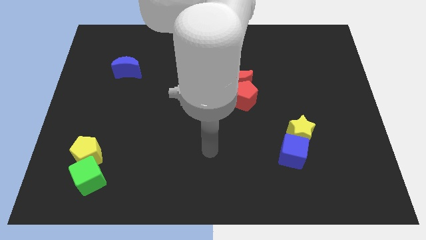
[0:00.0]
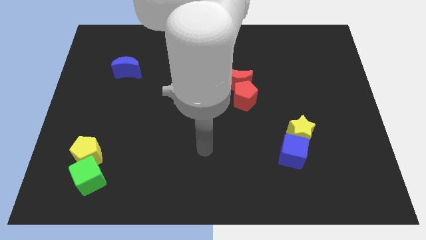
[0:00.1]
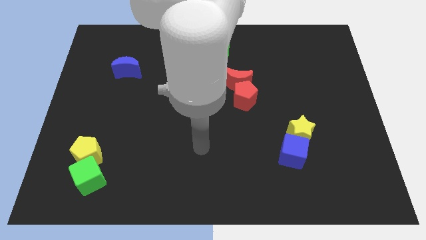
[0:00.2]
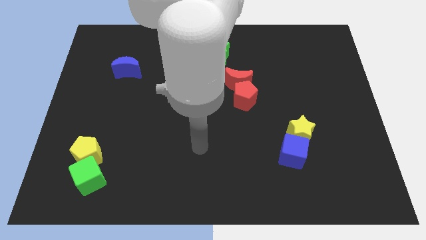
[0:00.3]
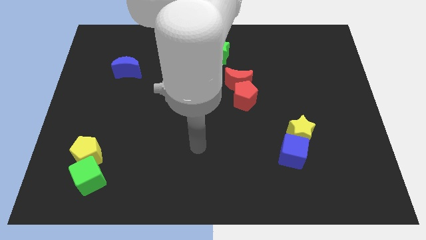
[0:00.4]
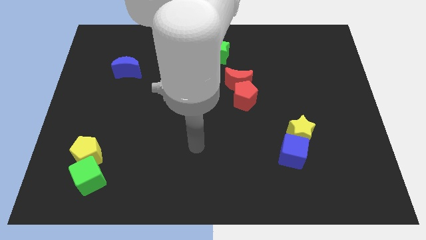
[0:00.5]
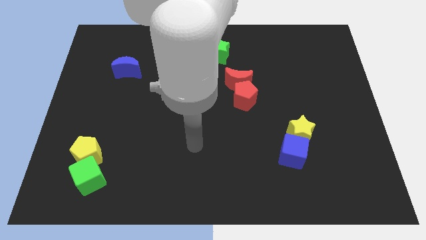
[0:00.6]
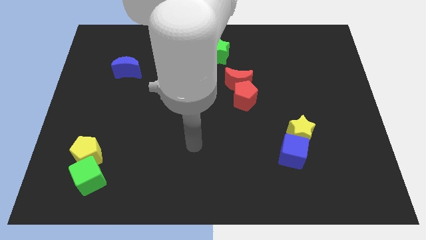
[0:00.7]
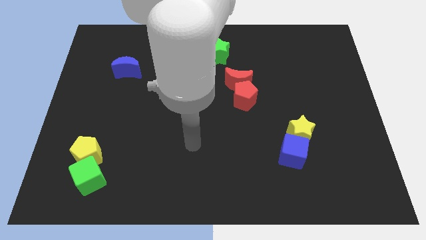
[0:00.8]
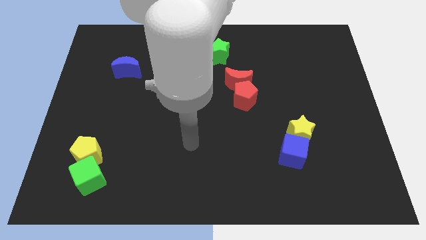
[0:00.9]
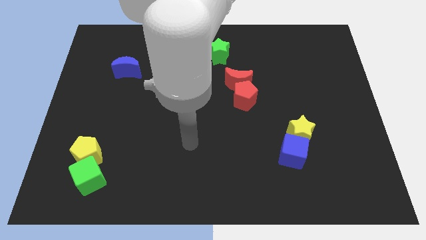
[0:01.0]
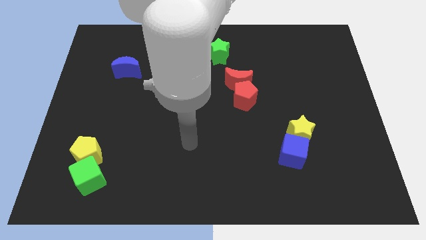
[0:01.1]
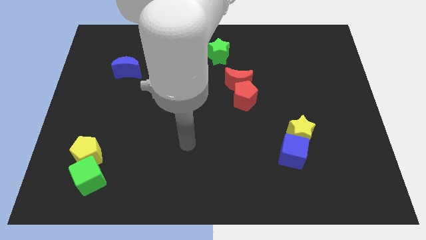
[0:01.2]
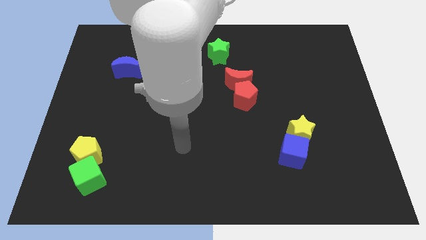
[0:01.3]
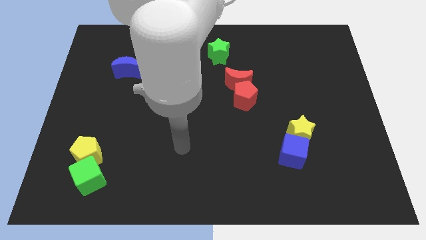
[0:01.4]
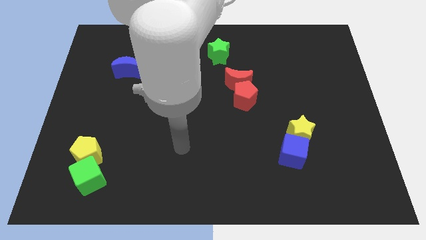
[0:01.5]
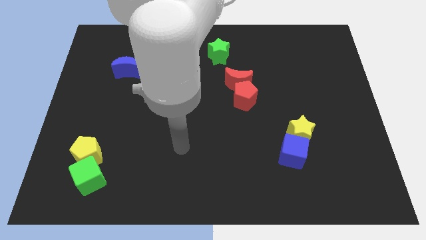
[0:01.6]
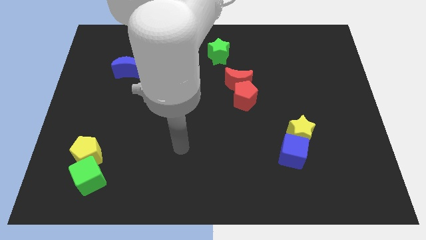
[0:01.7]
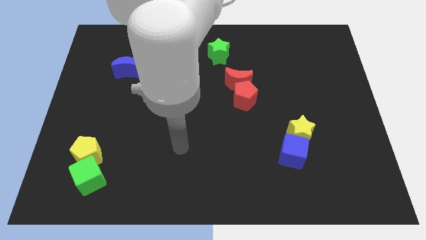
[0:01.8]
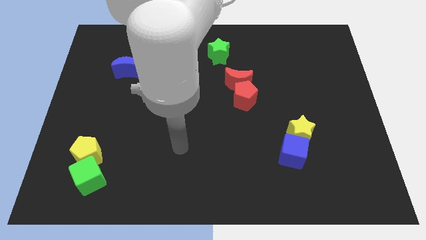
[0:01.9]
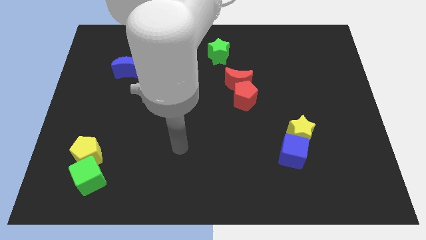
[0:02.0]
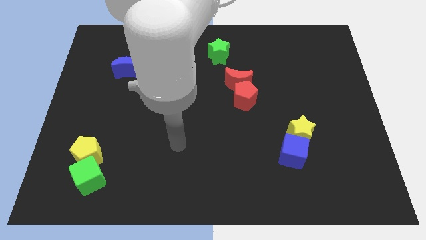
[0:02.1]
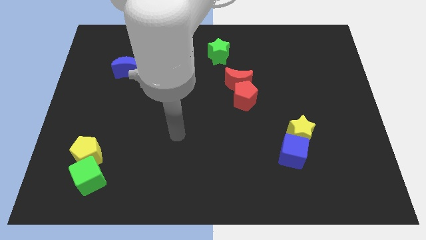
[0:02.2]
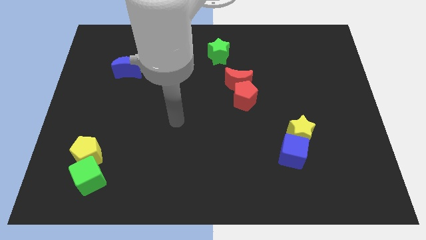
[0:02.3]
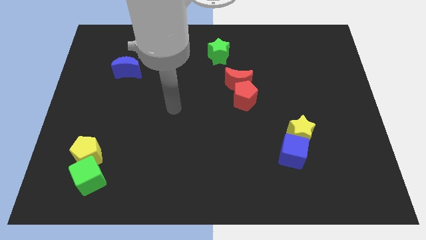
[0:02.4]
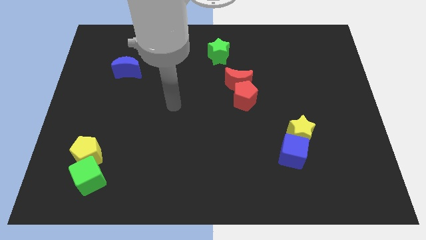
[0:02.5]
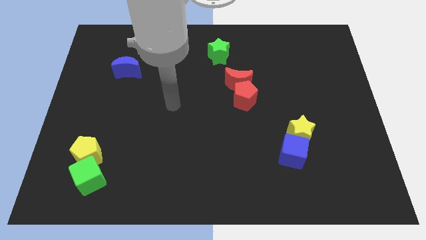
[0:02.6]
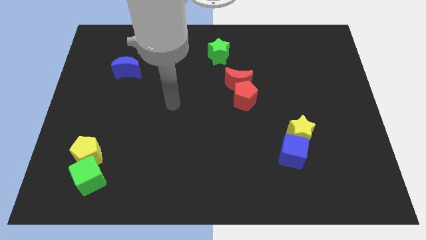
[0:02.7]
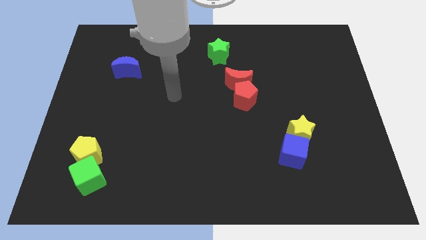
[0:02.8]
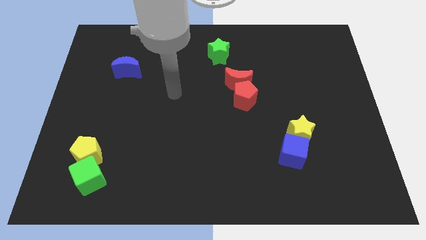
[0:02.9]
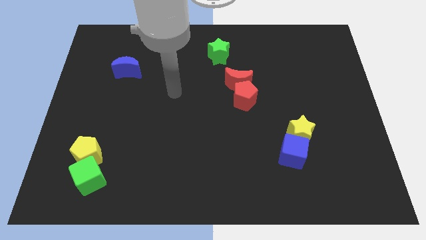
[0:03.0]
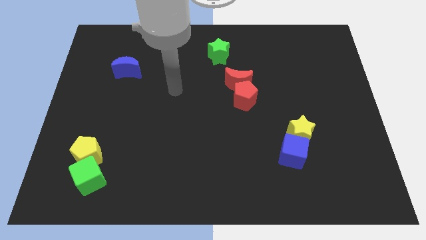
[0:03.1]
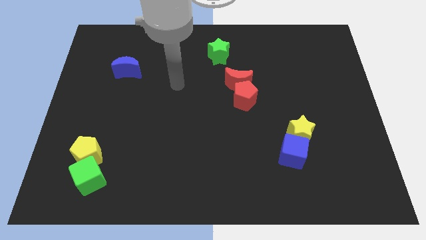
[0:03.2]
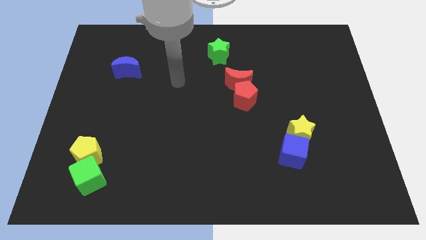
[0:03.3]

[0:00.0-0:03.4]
move your arm in between the red moon and blue moon

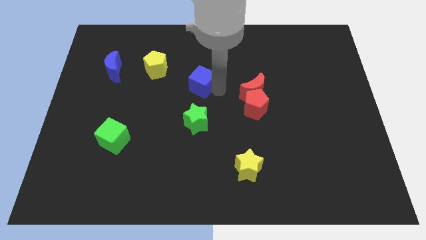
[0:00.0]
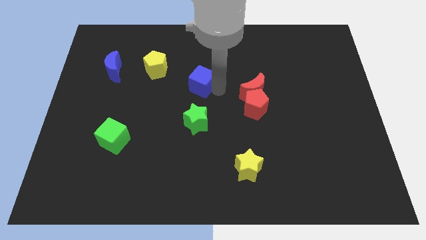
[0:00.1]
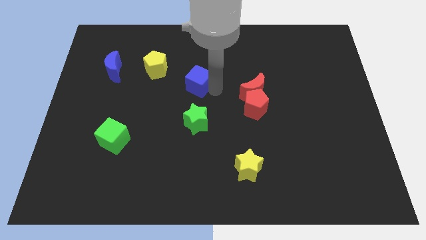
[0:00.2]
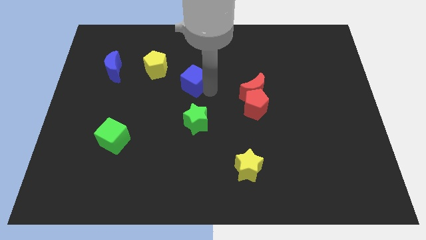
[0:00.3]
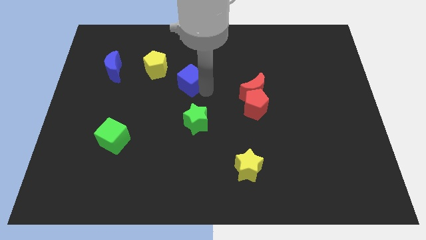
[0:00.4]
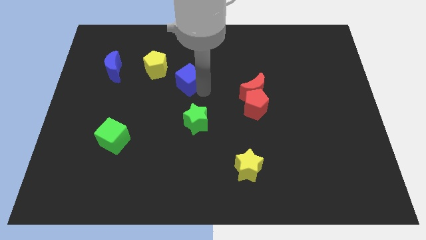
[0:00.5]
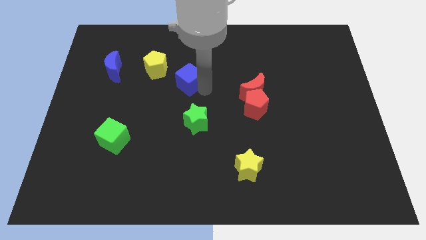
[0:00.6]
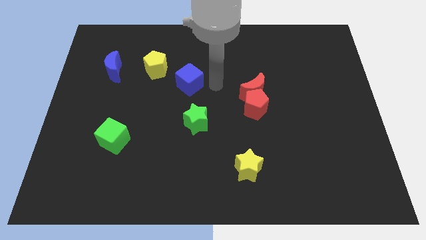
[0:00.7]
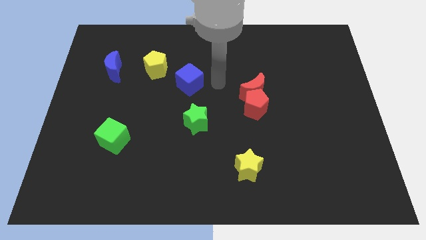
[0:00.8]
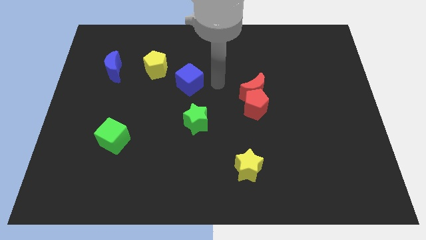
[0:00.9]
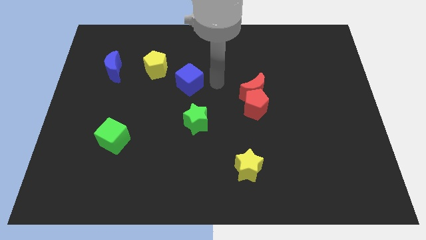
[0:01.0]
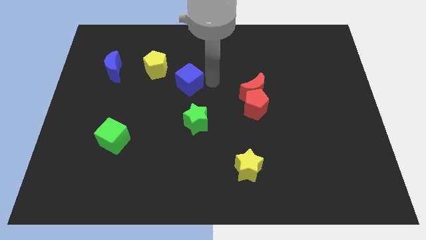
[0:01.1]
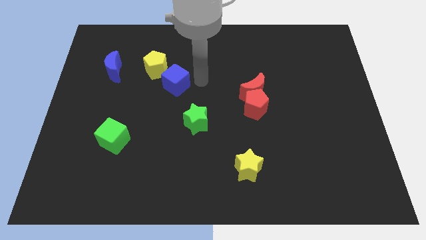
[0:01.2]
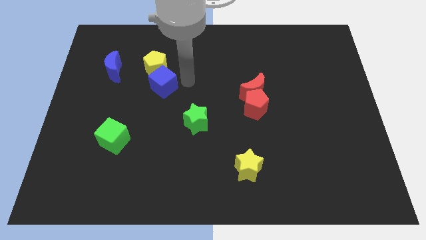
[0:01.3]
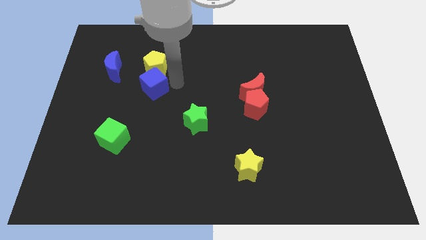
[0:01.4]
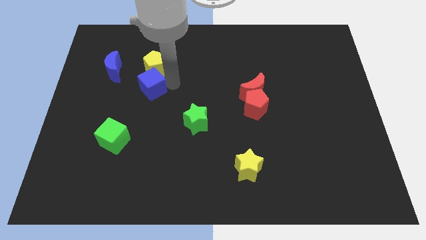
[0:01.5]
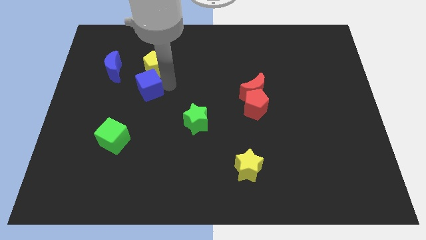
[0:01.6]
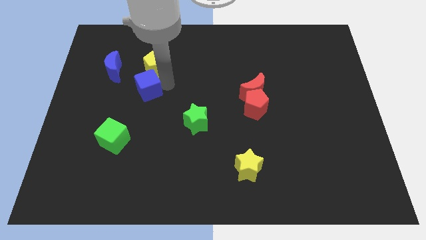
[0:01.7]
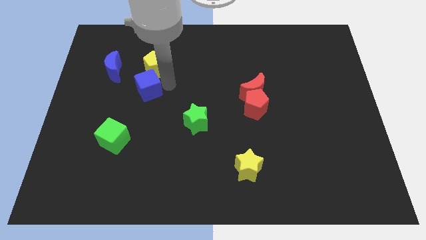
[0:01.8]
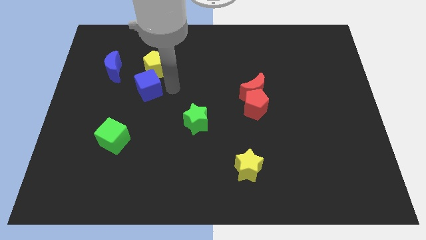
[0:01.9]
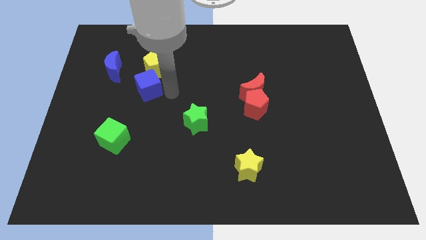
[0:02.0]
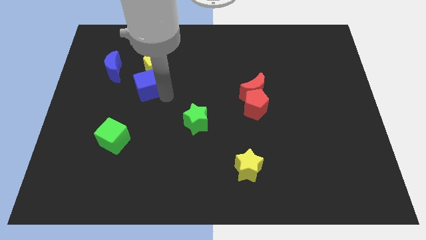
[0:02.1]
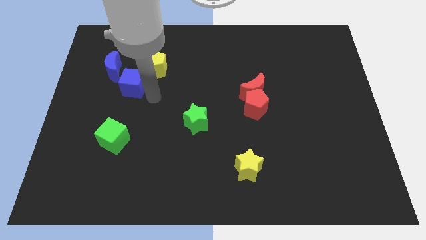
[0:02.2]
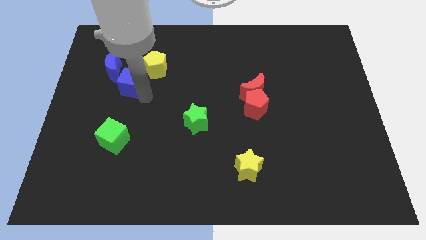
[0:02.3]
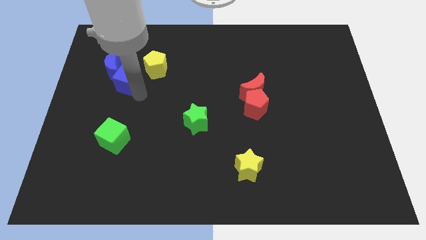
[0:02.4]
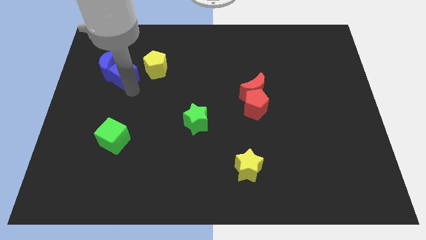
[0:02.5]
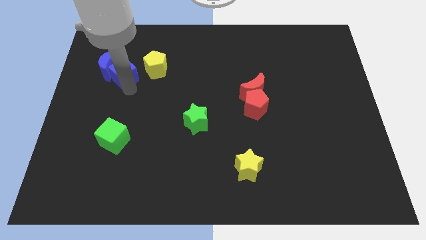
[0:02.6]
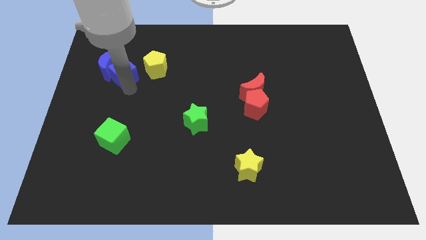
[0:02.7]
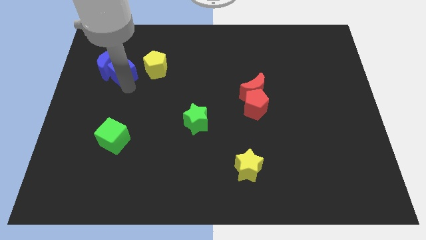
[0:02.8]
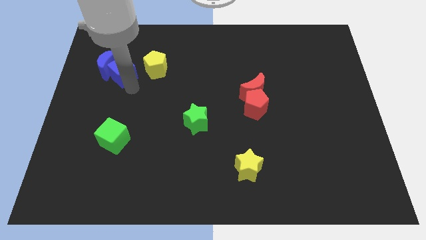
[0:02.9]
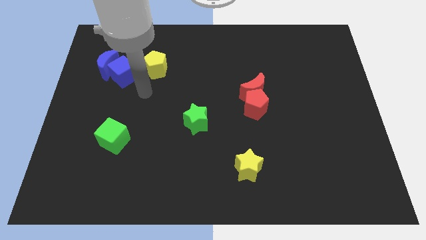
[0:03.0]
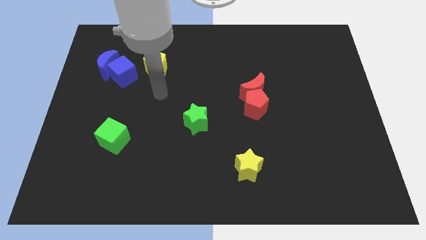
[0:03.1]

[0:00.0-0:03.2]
push the blue cube into the blue crescent

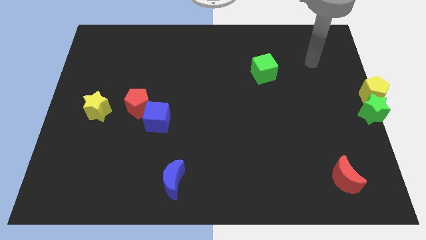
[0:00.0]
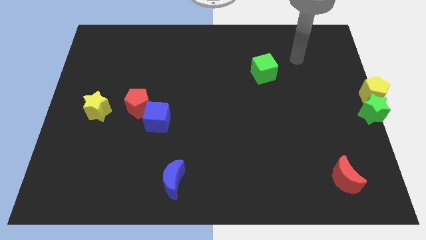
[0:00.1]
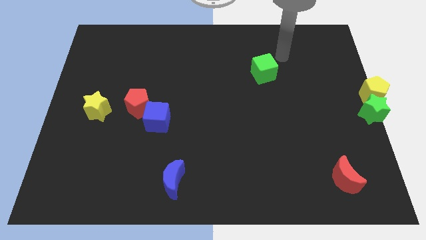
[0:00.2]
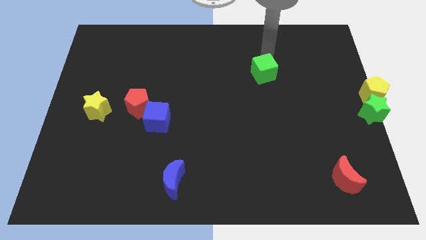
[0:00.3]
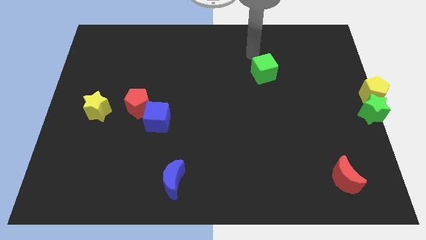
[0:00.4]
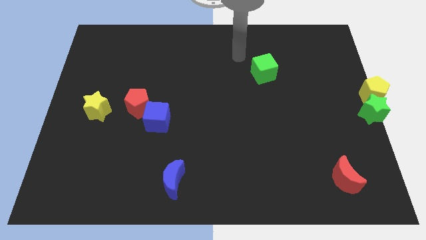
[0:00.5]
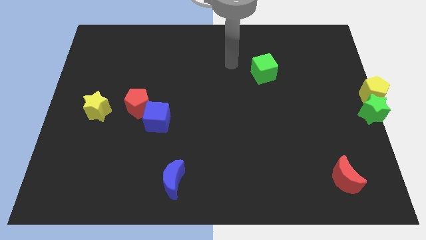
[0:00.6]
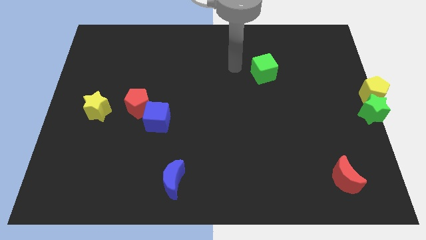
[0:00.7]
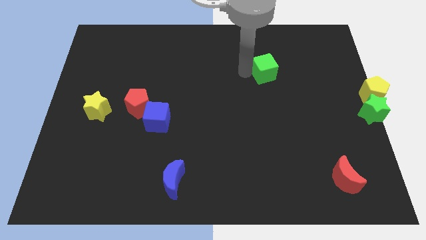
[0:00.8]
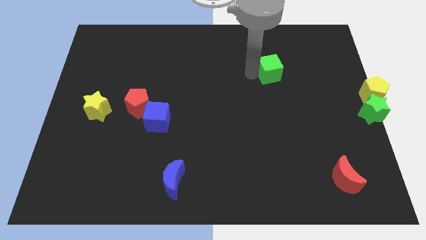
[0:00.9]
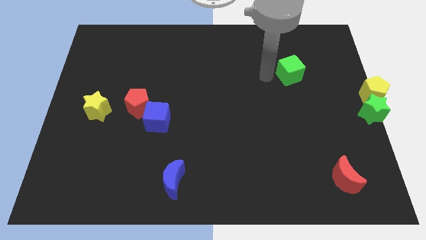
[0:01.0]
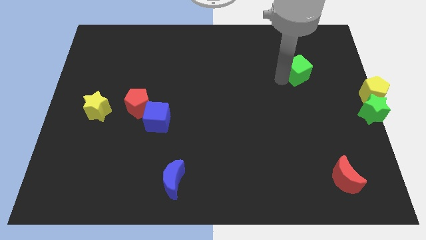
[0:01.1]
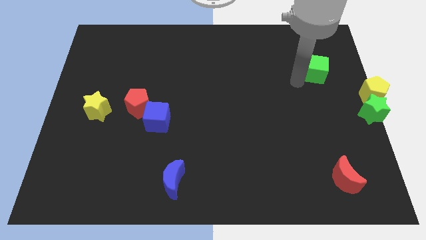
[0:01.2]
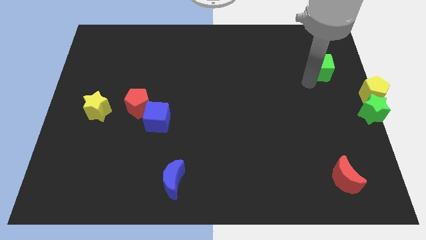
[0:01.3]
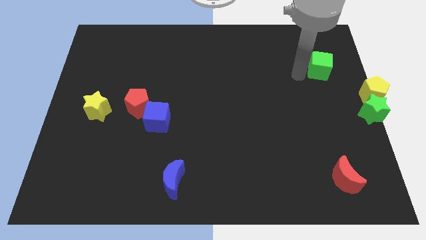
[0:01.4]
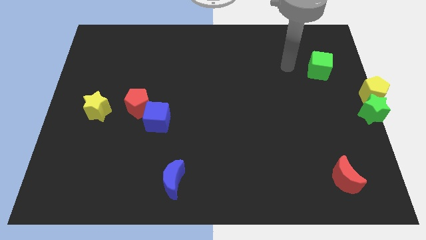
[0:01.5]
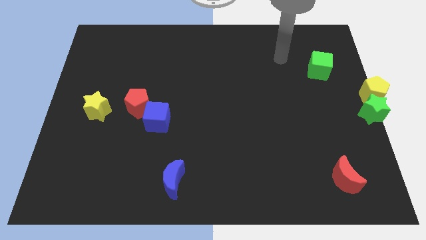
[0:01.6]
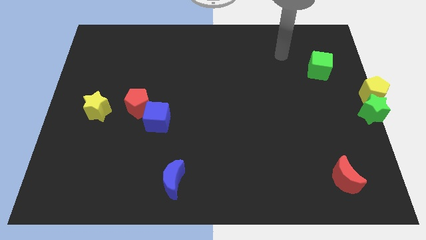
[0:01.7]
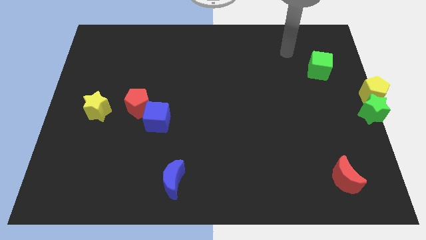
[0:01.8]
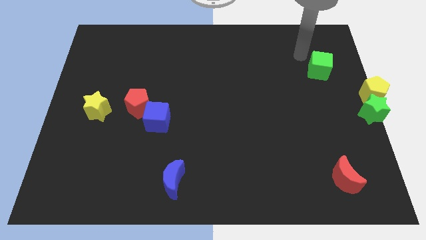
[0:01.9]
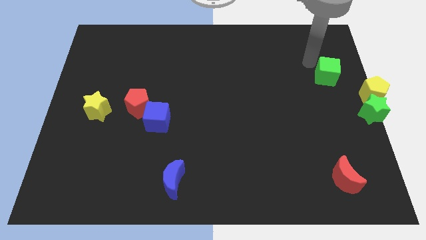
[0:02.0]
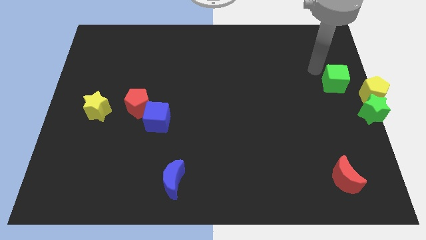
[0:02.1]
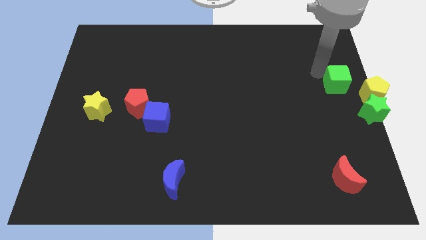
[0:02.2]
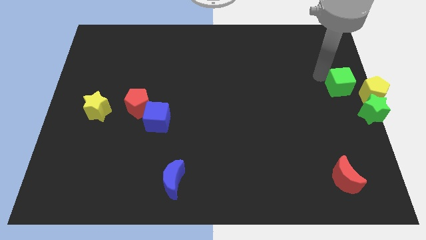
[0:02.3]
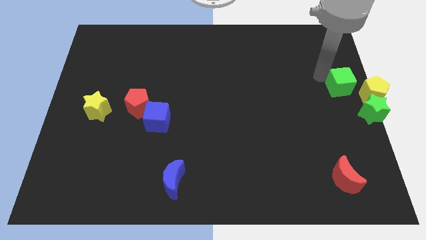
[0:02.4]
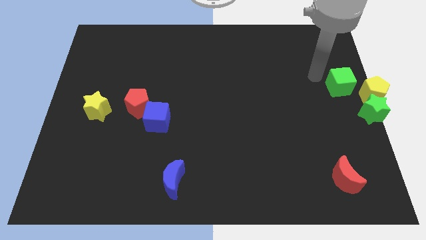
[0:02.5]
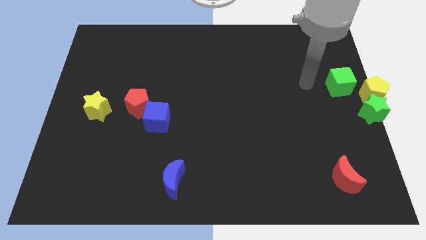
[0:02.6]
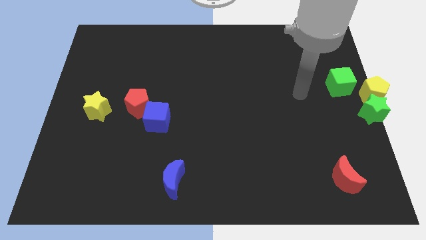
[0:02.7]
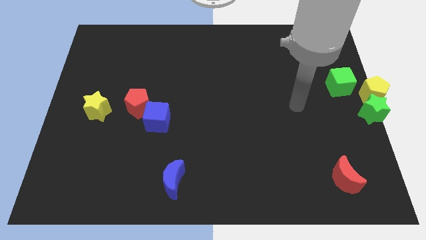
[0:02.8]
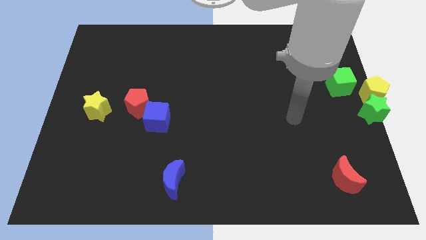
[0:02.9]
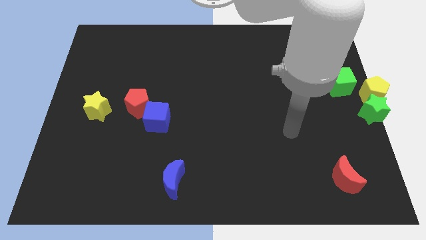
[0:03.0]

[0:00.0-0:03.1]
move the green cube towards the yellow pentagon
